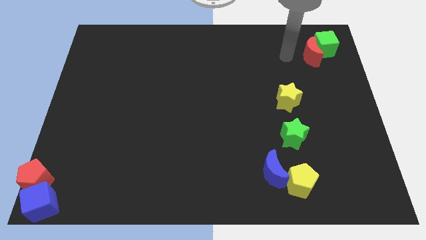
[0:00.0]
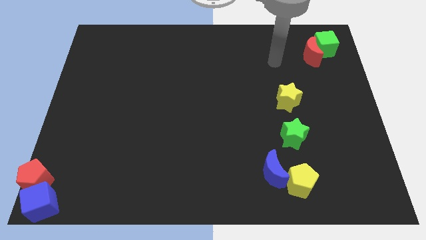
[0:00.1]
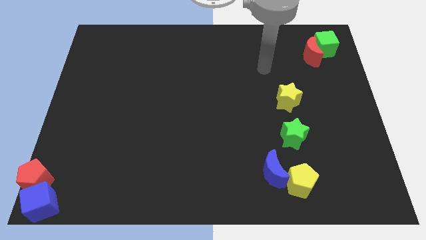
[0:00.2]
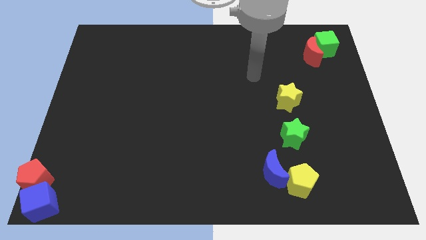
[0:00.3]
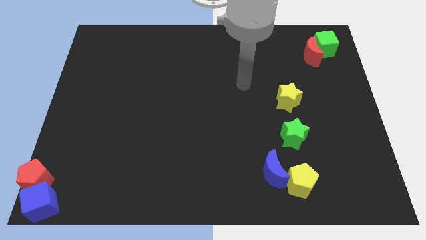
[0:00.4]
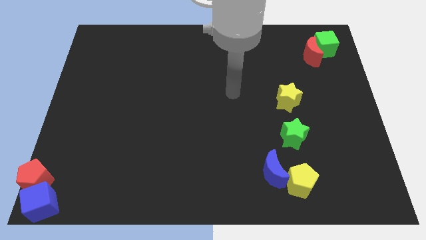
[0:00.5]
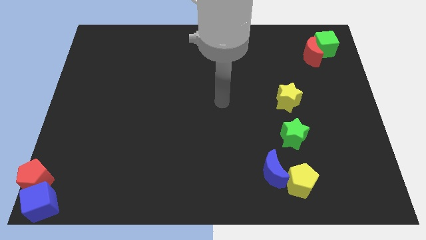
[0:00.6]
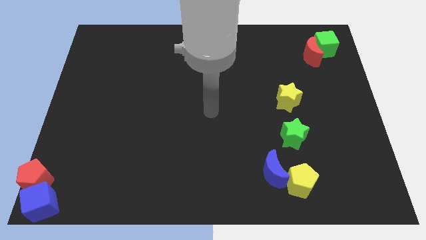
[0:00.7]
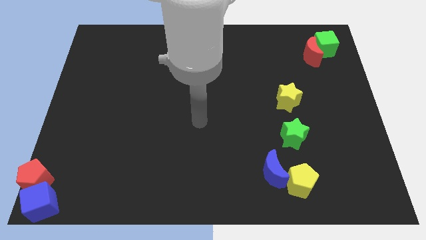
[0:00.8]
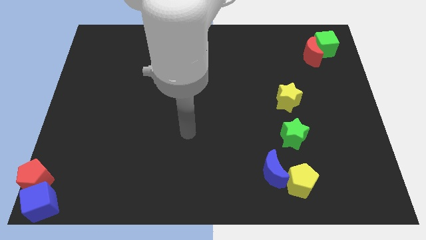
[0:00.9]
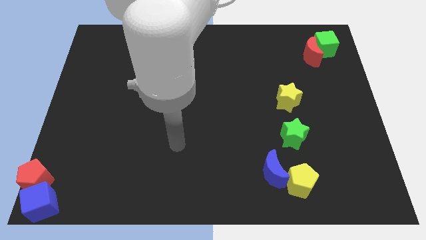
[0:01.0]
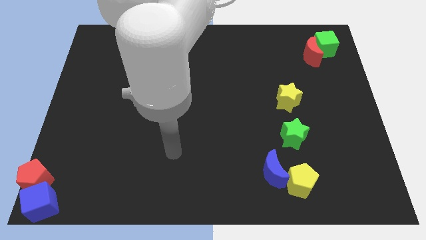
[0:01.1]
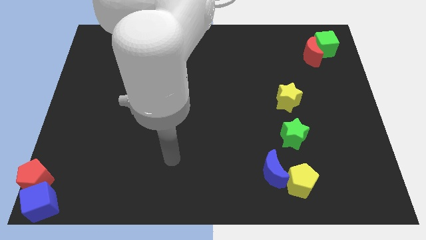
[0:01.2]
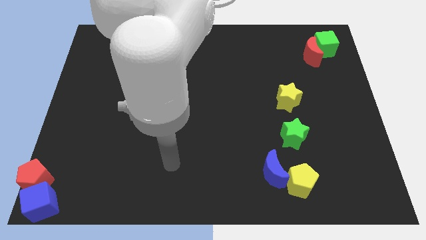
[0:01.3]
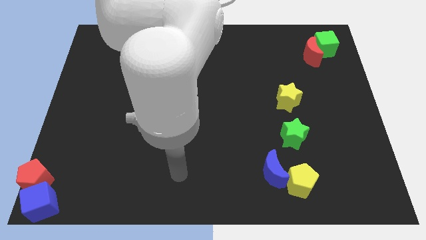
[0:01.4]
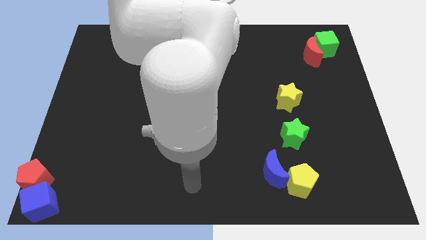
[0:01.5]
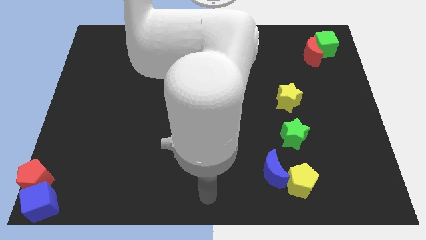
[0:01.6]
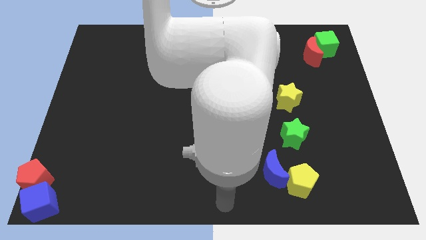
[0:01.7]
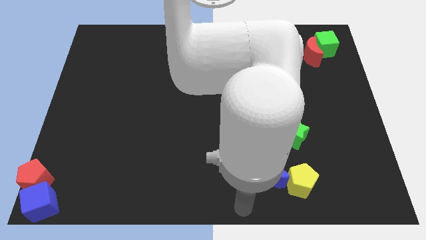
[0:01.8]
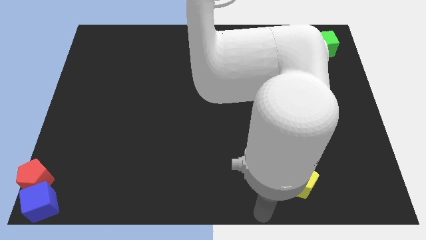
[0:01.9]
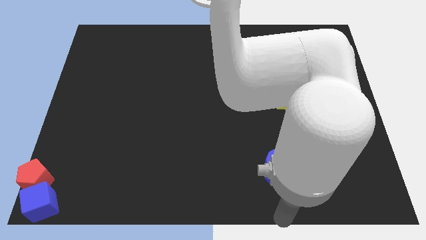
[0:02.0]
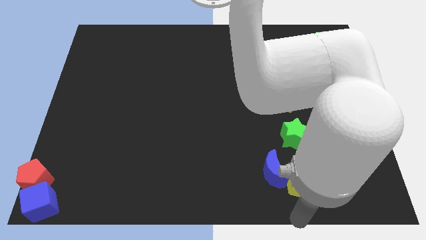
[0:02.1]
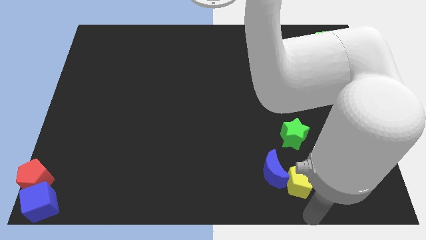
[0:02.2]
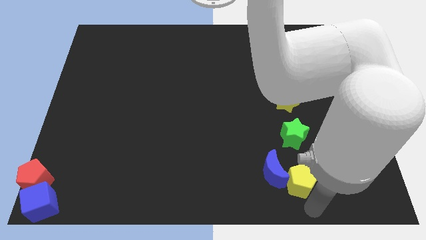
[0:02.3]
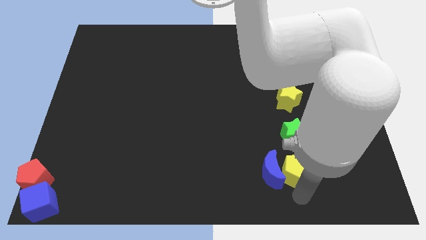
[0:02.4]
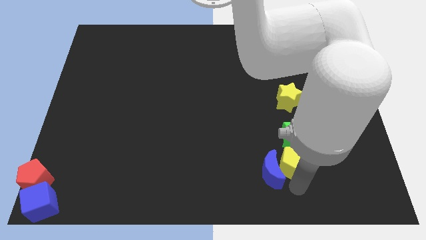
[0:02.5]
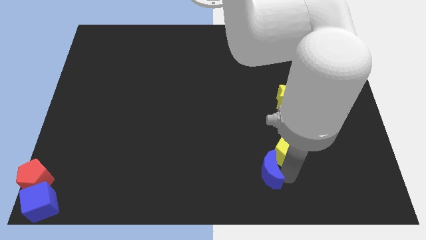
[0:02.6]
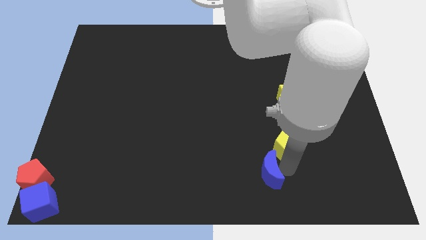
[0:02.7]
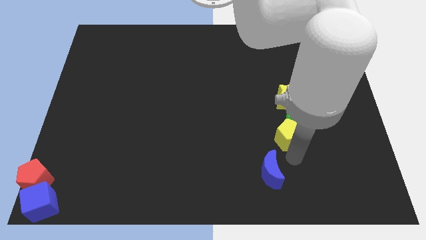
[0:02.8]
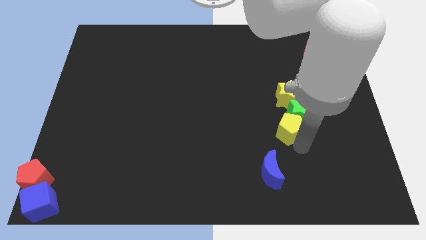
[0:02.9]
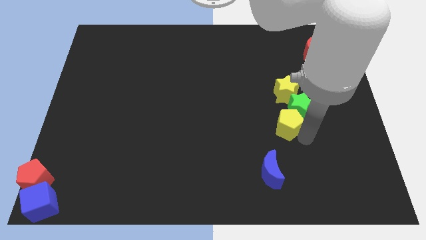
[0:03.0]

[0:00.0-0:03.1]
move the yellow pentagon into the green star

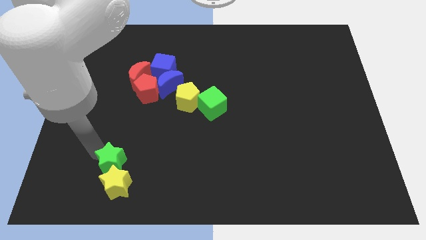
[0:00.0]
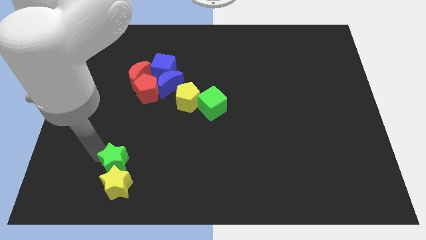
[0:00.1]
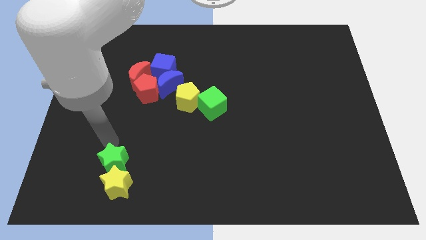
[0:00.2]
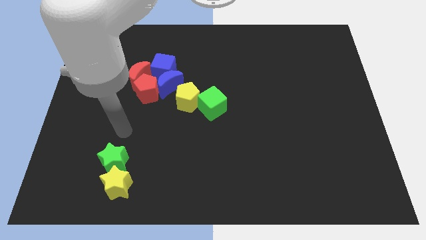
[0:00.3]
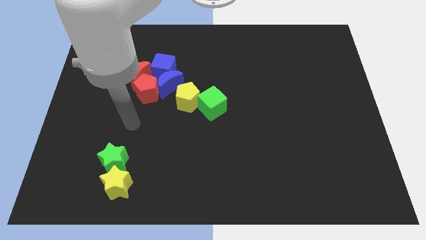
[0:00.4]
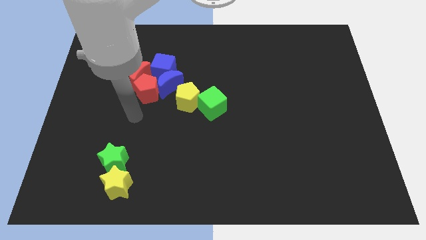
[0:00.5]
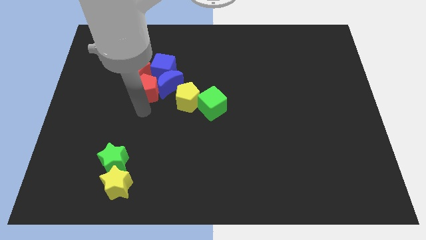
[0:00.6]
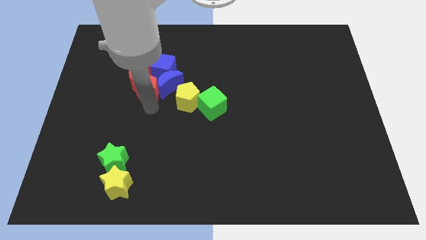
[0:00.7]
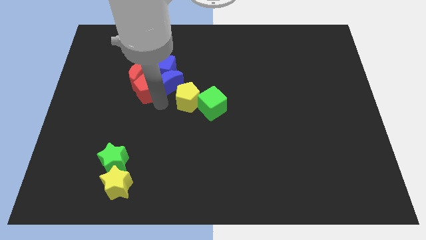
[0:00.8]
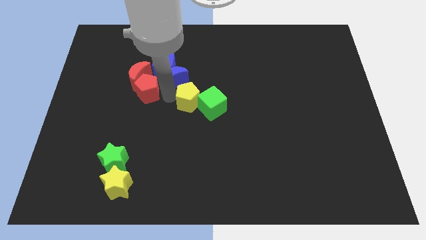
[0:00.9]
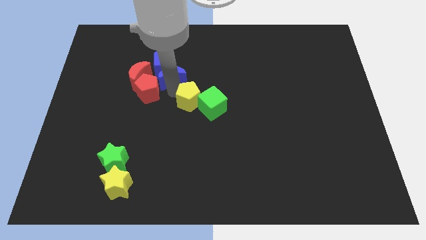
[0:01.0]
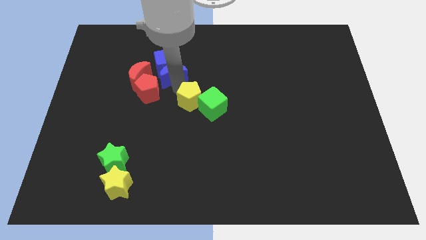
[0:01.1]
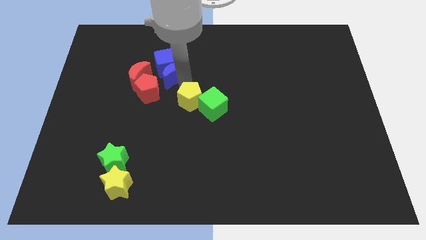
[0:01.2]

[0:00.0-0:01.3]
separate the blue blocks from the red blocks

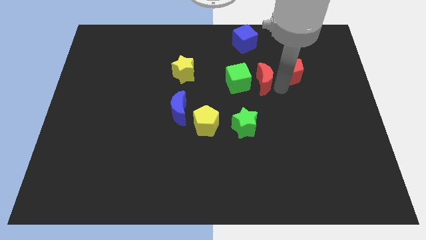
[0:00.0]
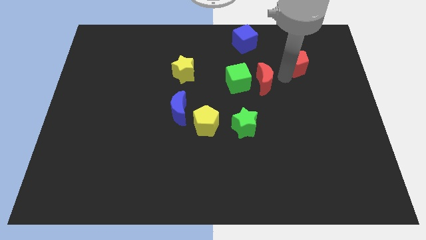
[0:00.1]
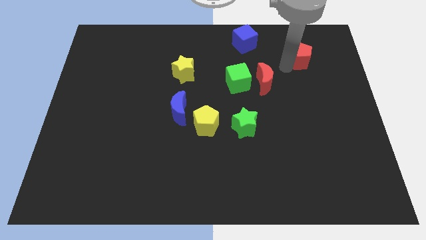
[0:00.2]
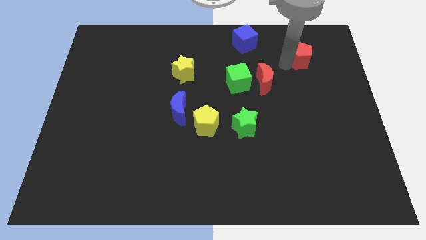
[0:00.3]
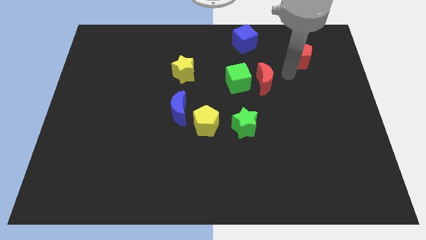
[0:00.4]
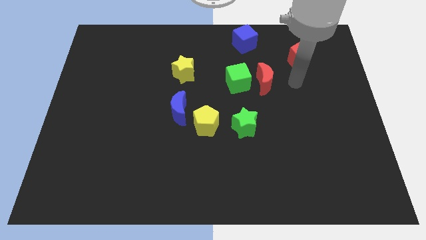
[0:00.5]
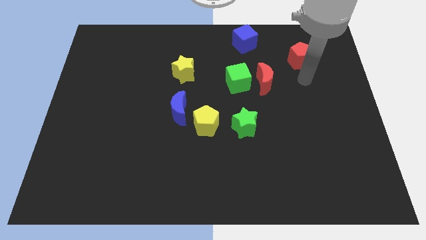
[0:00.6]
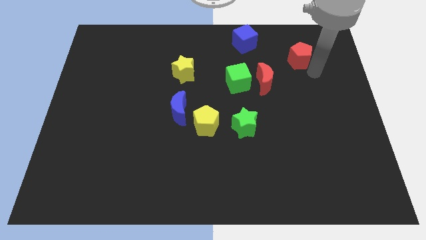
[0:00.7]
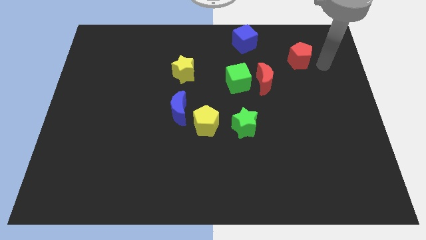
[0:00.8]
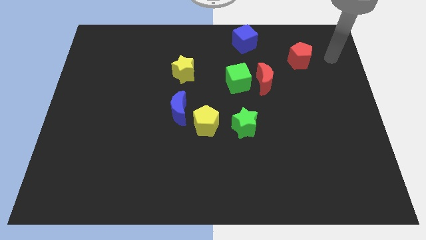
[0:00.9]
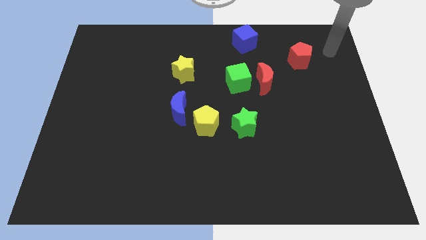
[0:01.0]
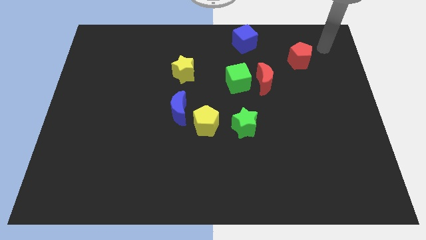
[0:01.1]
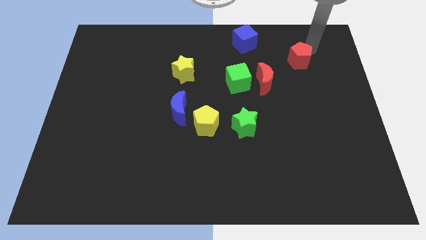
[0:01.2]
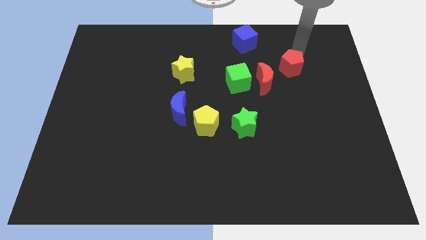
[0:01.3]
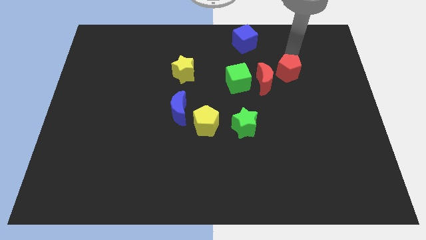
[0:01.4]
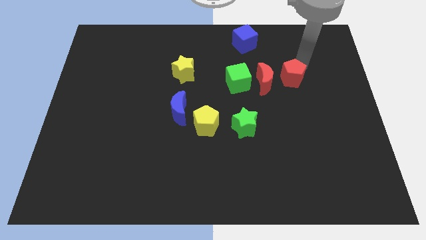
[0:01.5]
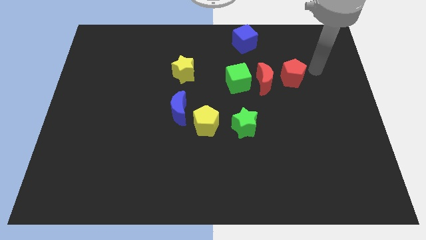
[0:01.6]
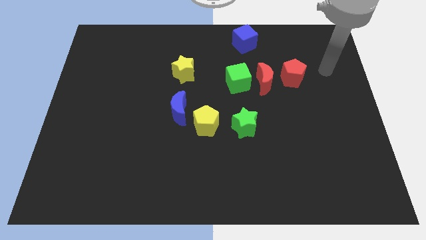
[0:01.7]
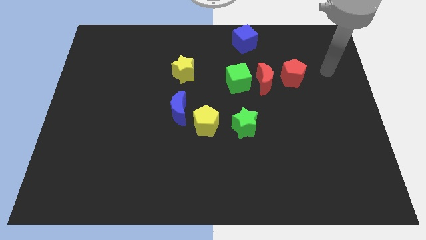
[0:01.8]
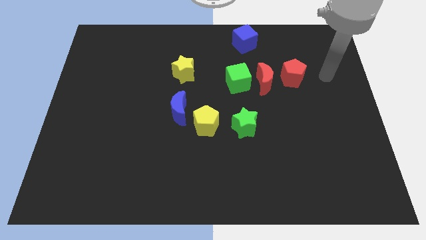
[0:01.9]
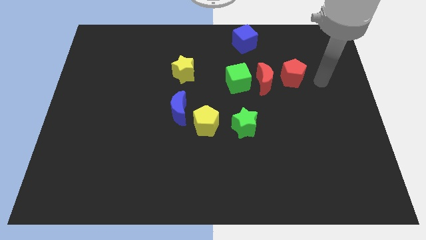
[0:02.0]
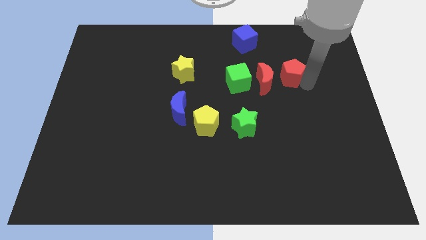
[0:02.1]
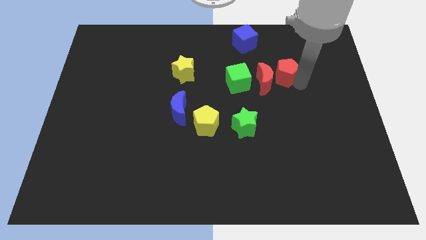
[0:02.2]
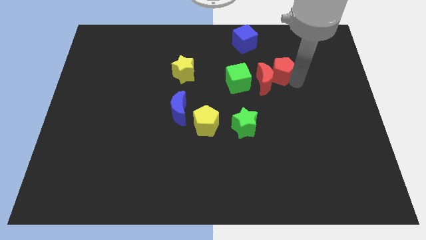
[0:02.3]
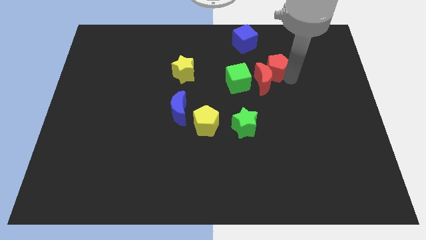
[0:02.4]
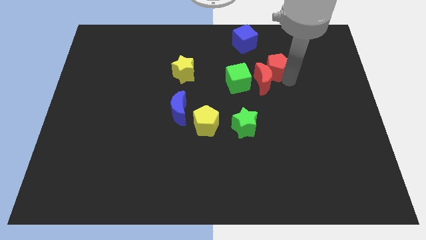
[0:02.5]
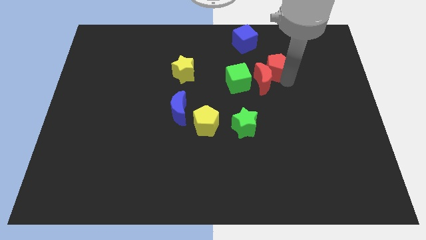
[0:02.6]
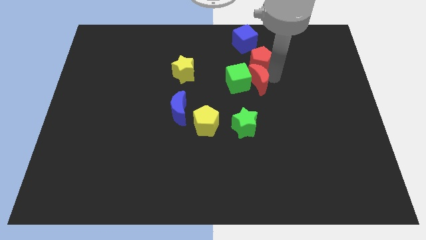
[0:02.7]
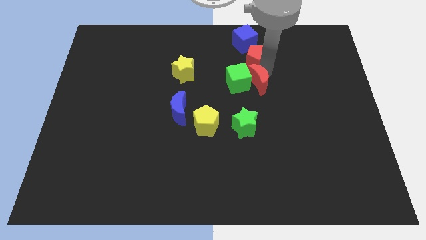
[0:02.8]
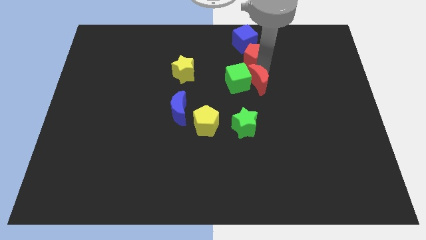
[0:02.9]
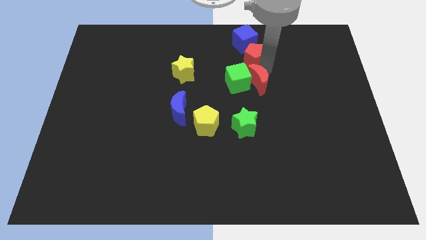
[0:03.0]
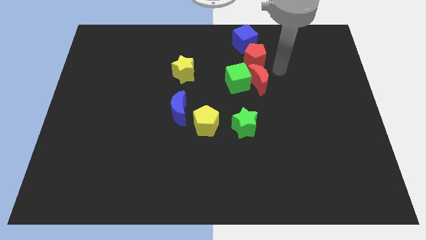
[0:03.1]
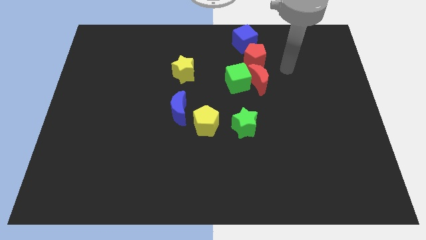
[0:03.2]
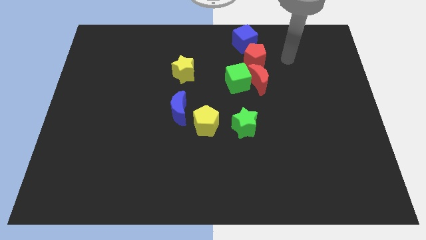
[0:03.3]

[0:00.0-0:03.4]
place the red pentagon at the top side of the red moon

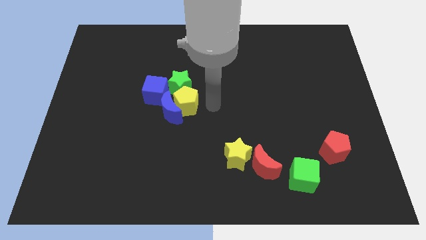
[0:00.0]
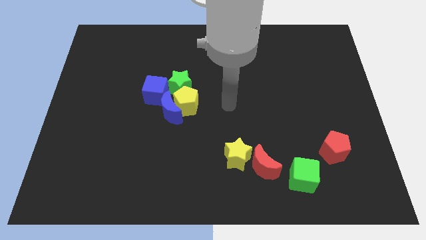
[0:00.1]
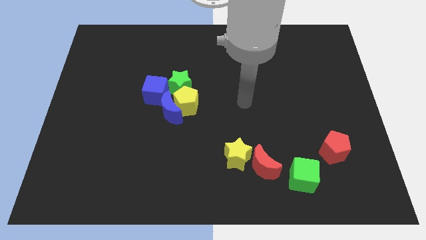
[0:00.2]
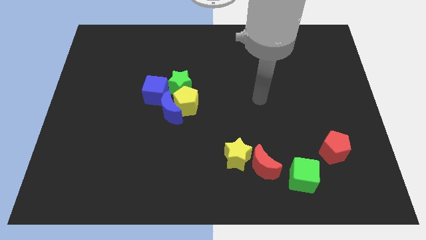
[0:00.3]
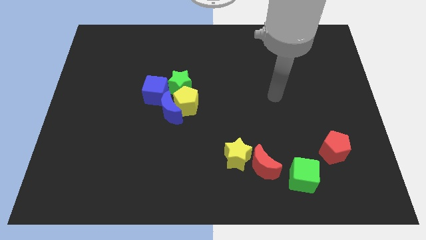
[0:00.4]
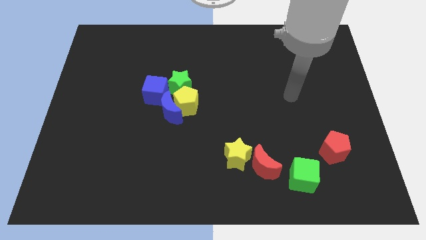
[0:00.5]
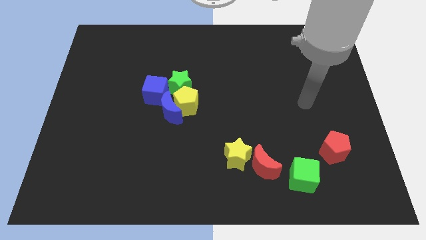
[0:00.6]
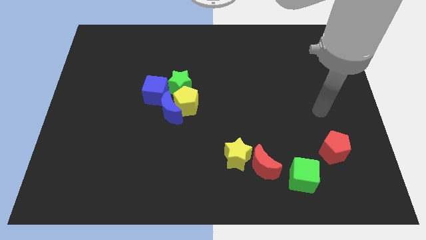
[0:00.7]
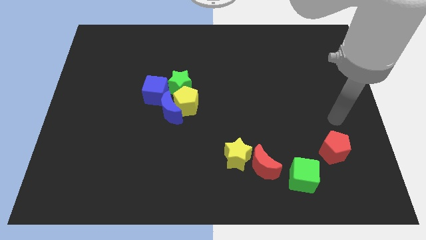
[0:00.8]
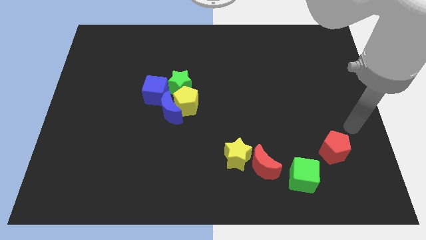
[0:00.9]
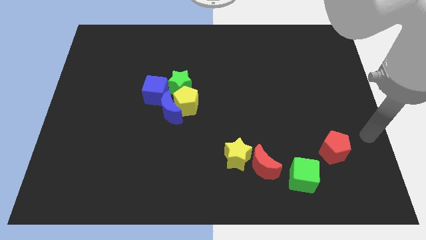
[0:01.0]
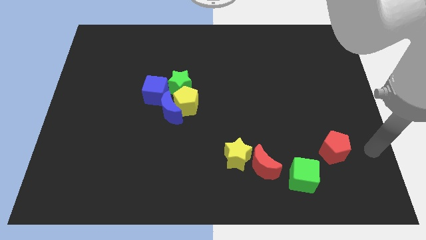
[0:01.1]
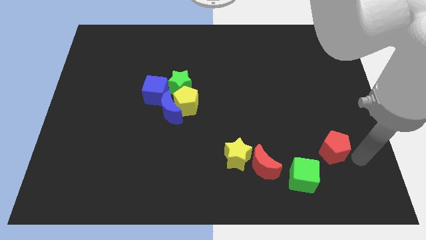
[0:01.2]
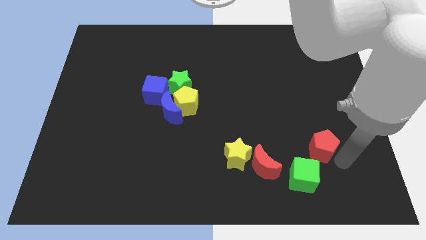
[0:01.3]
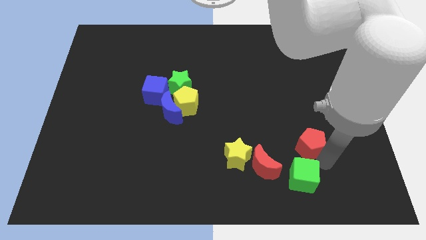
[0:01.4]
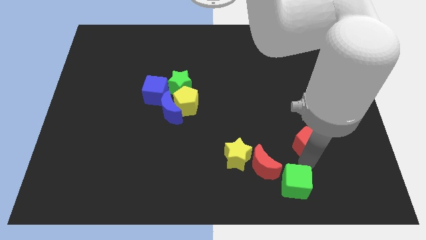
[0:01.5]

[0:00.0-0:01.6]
put arm at the bottom of red pentagon
